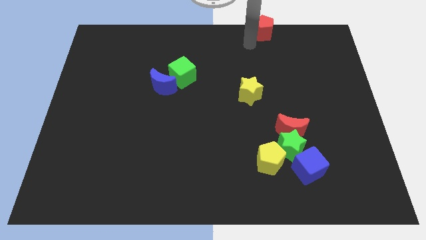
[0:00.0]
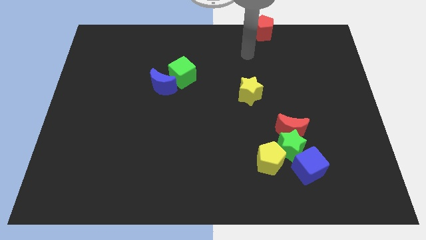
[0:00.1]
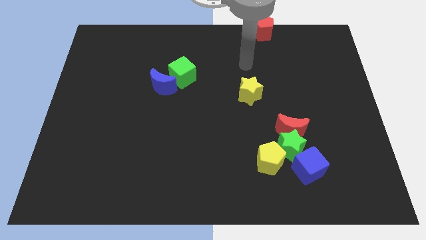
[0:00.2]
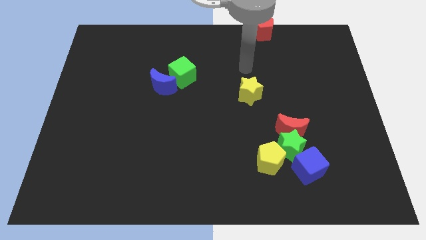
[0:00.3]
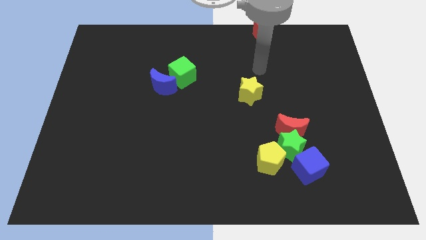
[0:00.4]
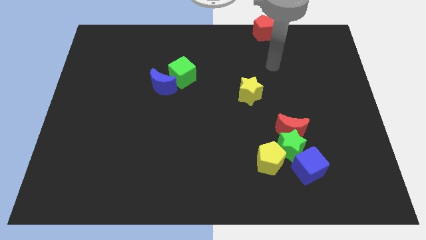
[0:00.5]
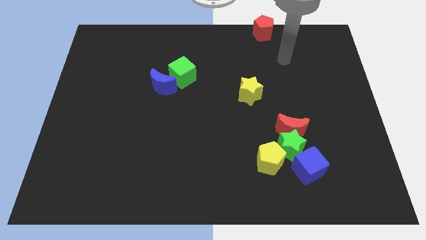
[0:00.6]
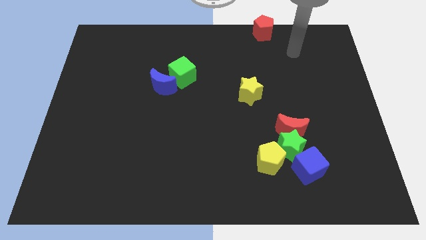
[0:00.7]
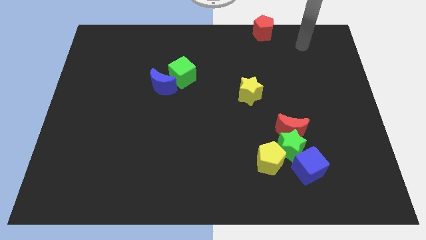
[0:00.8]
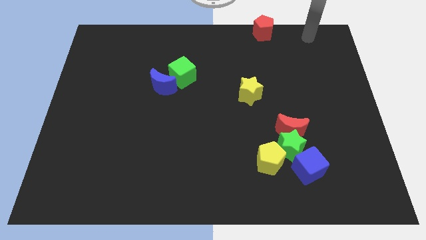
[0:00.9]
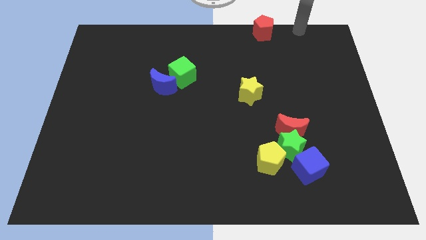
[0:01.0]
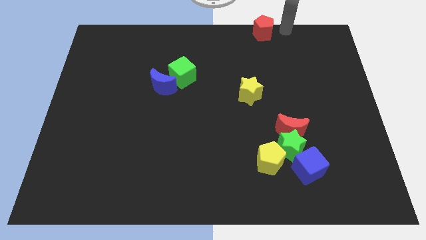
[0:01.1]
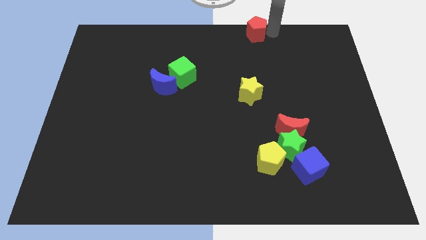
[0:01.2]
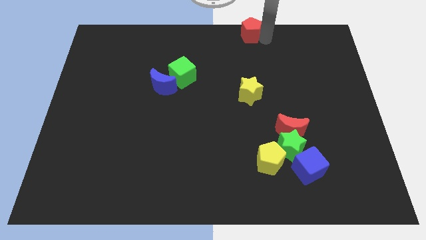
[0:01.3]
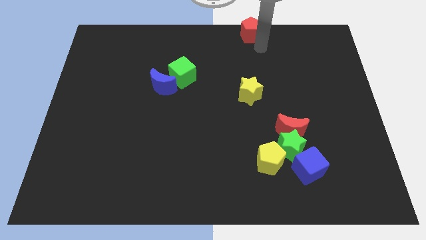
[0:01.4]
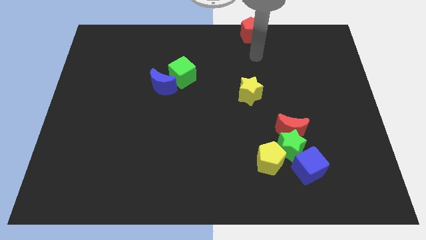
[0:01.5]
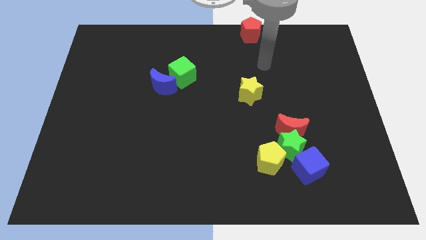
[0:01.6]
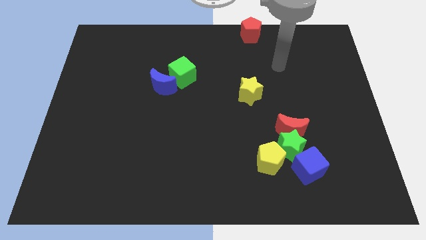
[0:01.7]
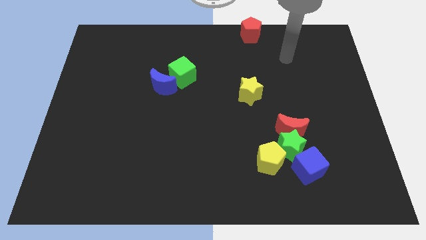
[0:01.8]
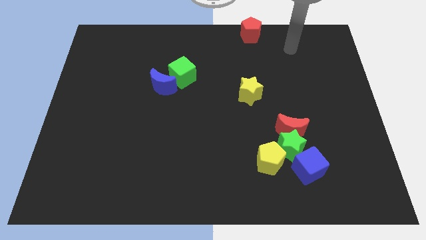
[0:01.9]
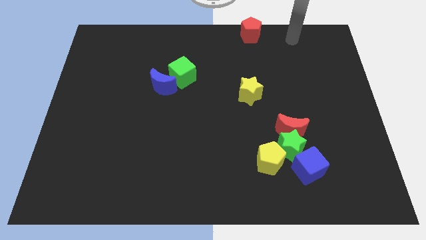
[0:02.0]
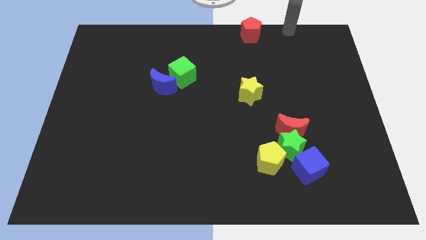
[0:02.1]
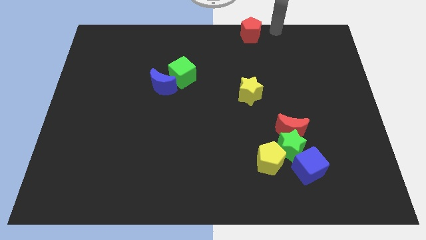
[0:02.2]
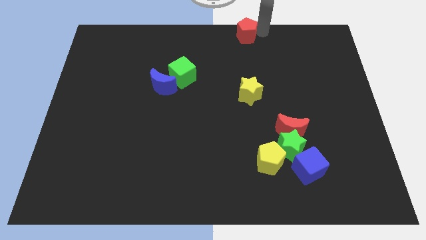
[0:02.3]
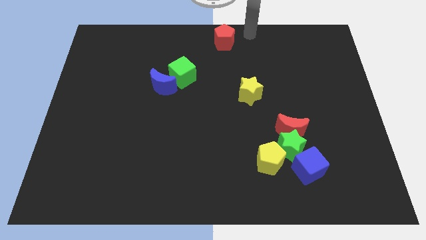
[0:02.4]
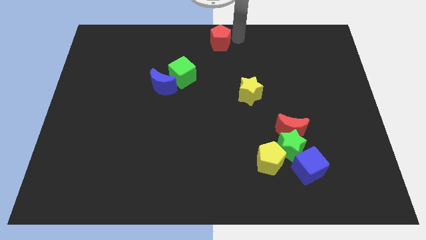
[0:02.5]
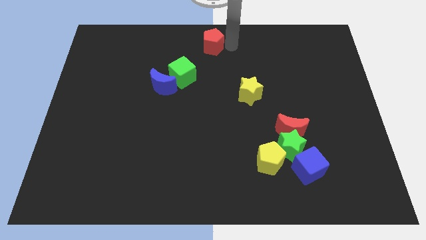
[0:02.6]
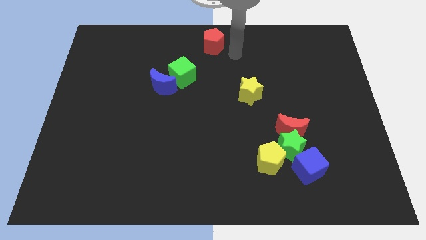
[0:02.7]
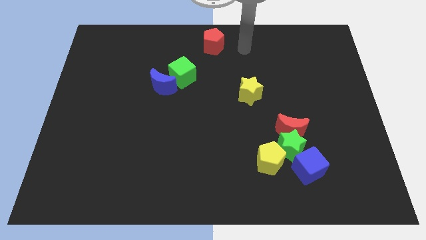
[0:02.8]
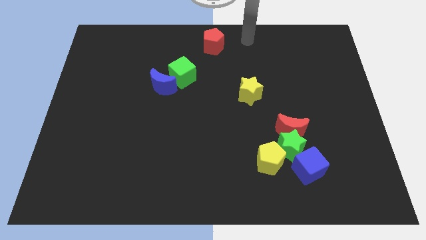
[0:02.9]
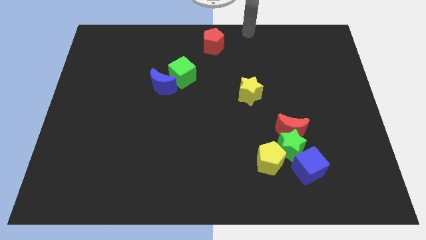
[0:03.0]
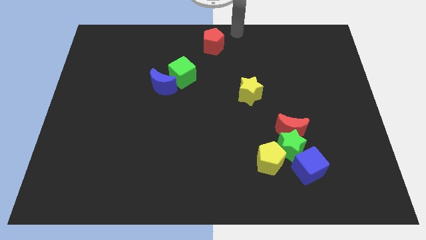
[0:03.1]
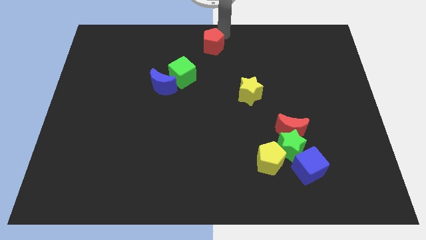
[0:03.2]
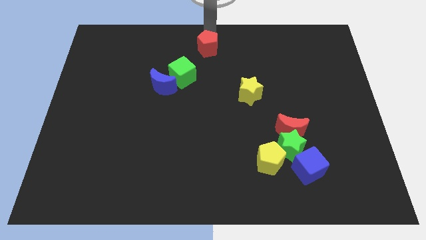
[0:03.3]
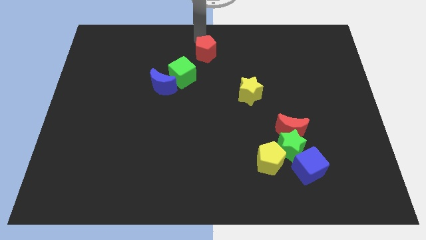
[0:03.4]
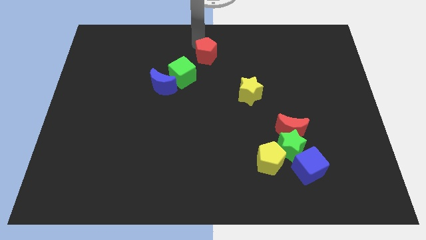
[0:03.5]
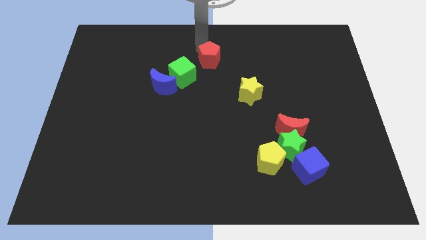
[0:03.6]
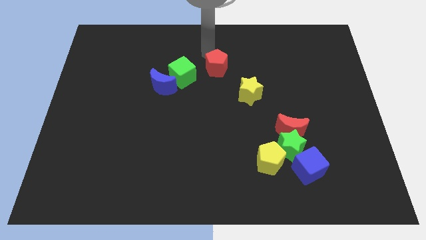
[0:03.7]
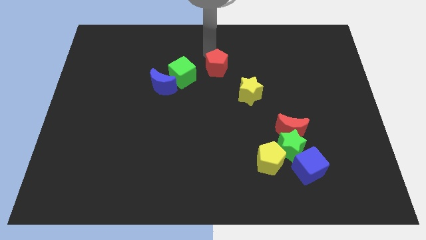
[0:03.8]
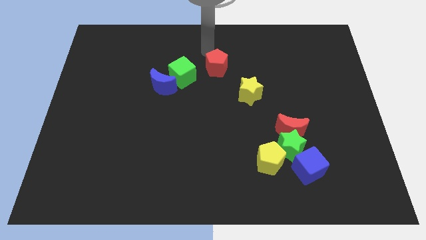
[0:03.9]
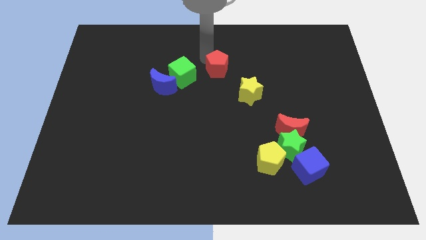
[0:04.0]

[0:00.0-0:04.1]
push red pentagon to the right of green cube

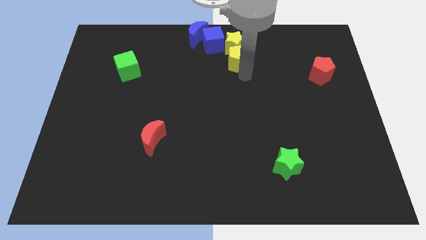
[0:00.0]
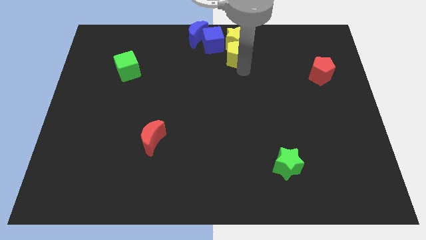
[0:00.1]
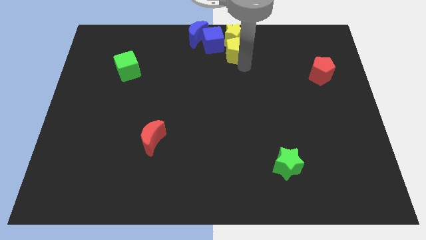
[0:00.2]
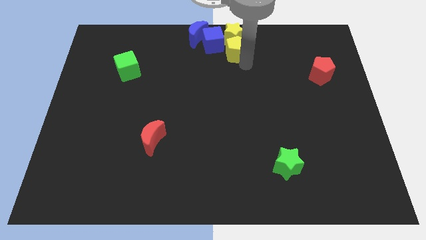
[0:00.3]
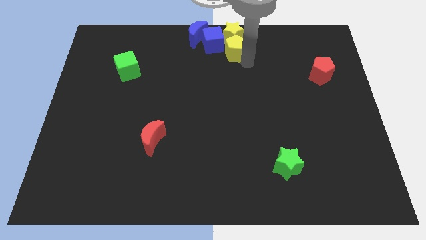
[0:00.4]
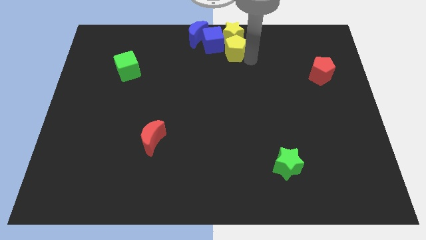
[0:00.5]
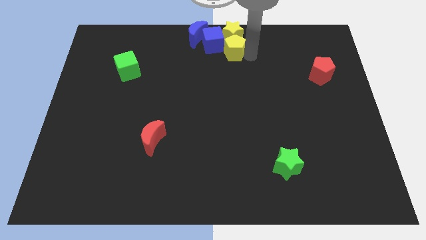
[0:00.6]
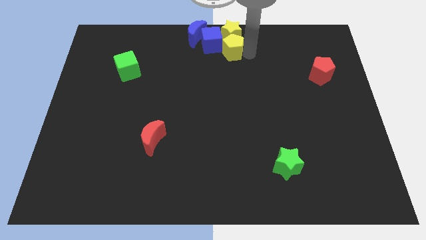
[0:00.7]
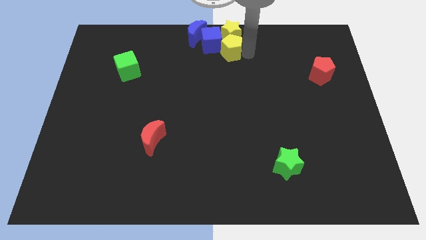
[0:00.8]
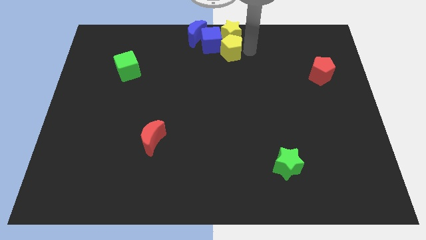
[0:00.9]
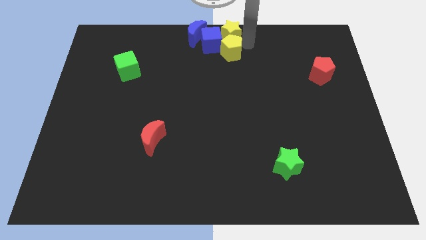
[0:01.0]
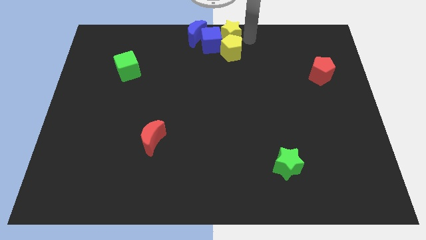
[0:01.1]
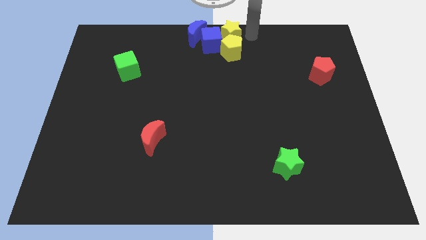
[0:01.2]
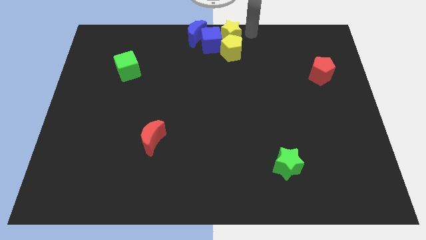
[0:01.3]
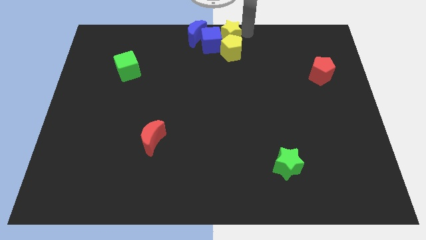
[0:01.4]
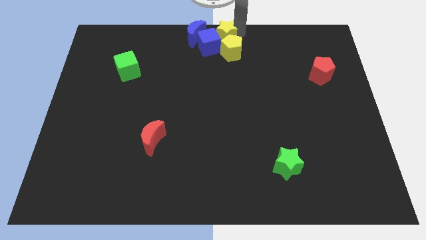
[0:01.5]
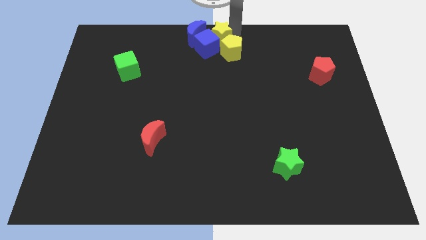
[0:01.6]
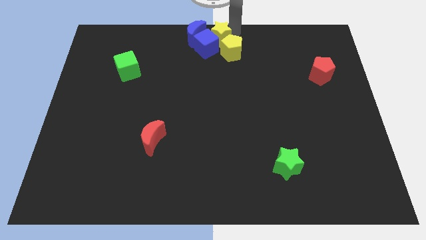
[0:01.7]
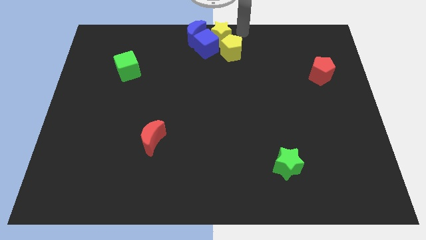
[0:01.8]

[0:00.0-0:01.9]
place yellow pentagon and yellow star into the blue blocks

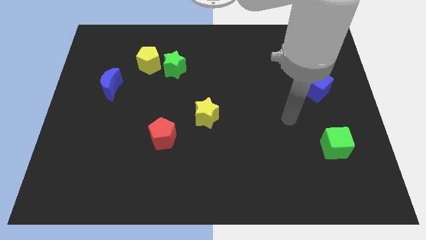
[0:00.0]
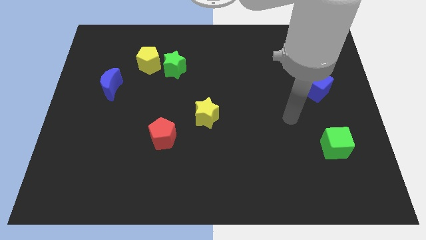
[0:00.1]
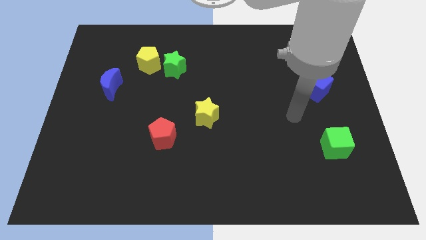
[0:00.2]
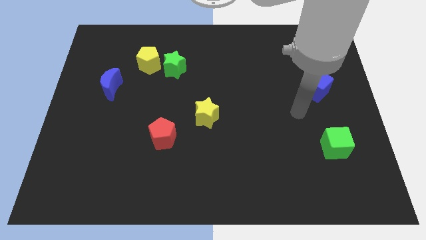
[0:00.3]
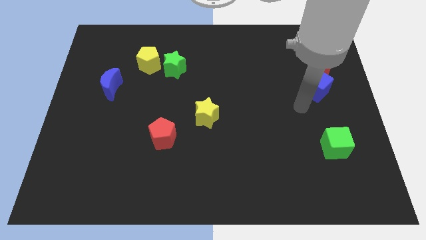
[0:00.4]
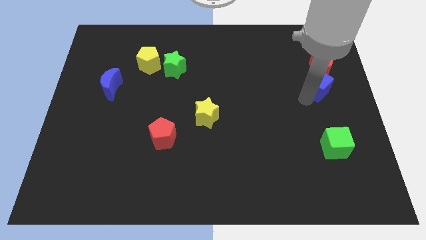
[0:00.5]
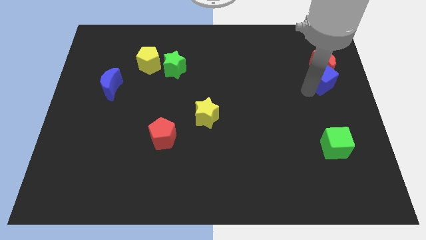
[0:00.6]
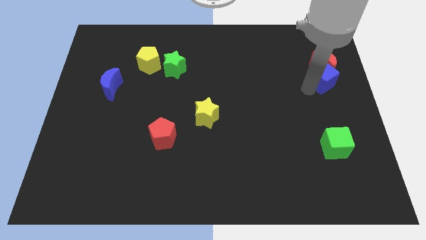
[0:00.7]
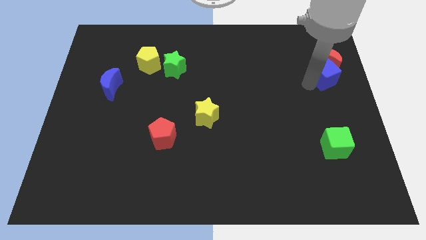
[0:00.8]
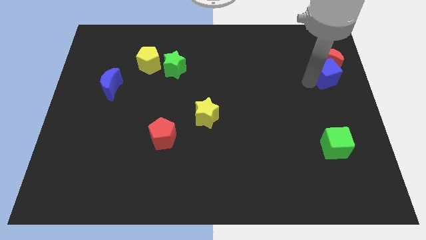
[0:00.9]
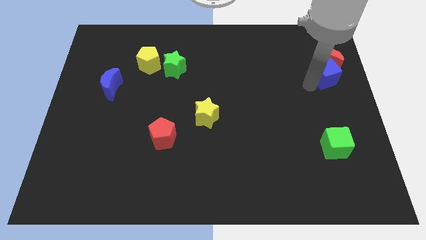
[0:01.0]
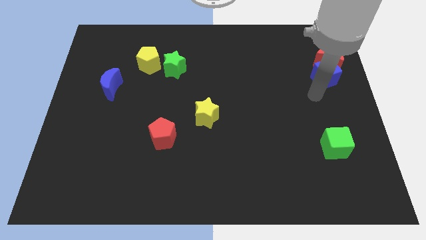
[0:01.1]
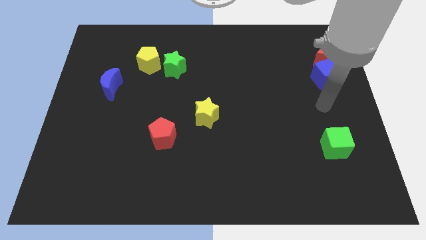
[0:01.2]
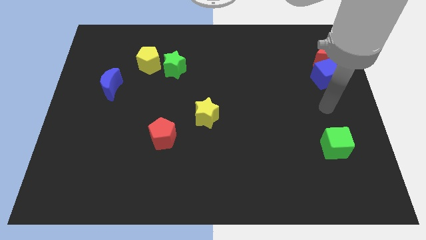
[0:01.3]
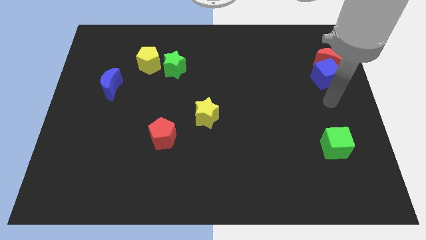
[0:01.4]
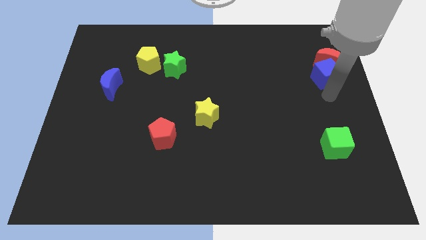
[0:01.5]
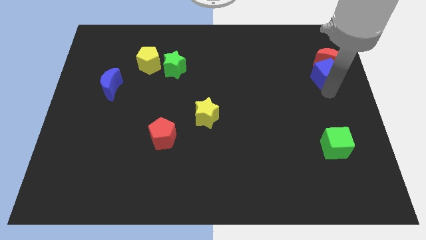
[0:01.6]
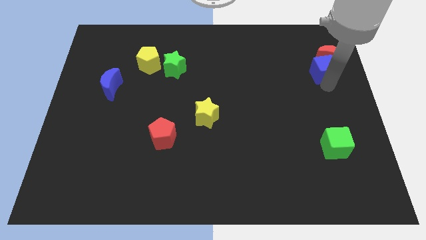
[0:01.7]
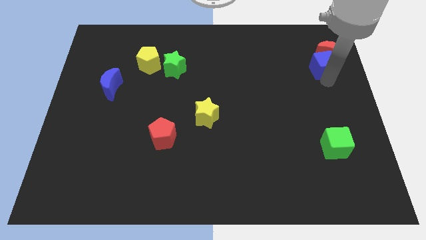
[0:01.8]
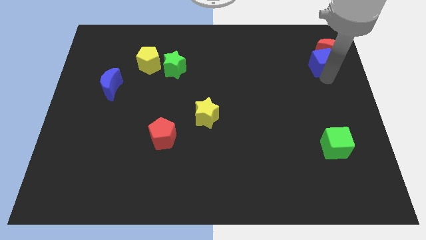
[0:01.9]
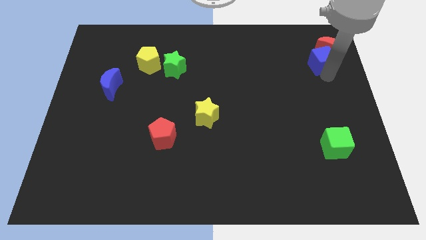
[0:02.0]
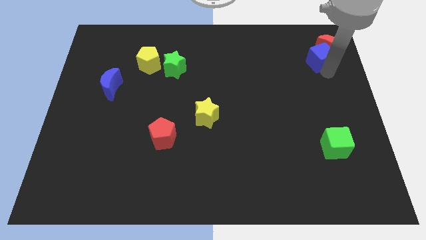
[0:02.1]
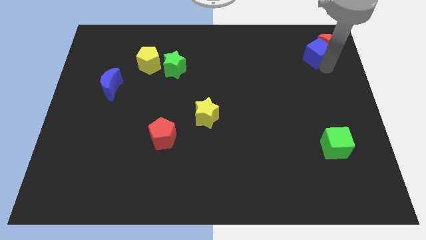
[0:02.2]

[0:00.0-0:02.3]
push blue cube into red moon

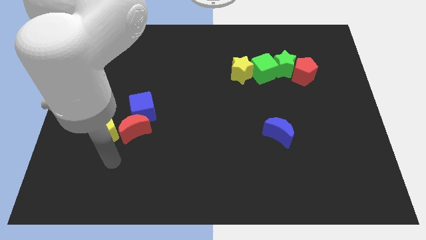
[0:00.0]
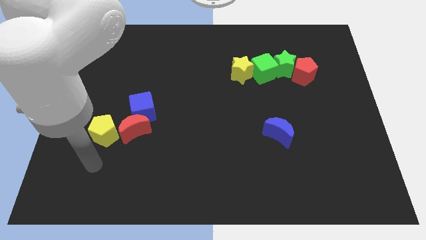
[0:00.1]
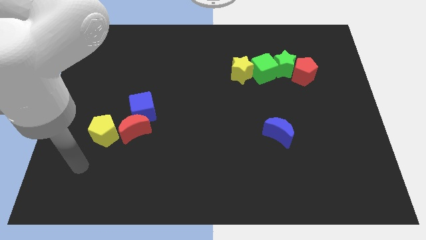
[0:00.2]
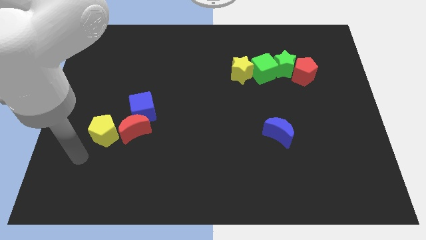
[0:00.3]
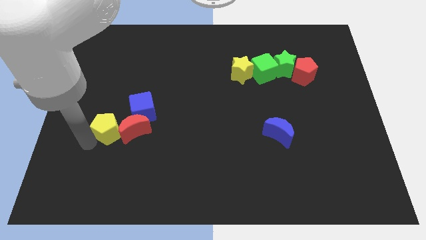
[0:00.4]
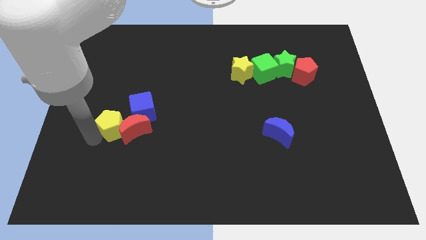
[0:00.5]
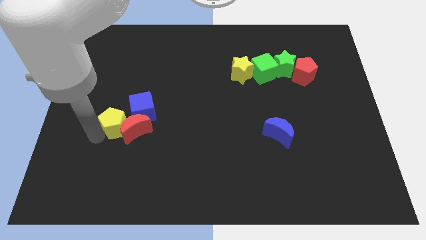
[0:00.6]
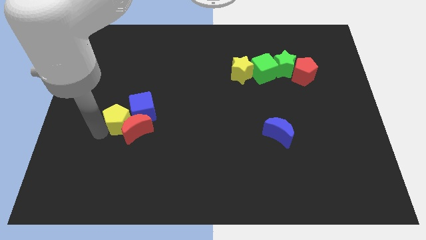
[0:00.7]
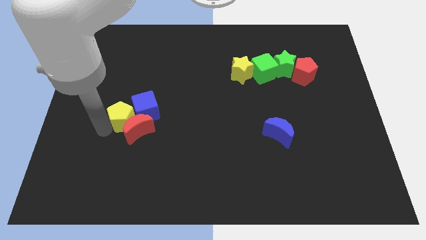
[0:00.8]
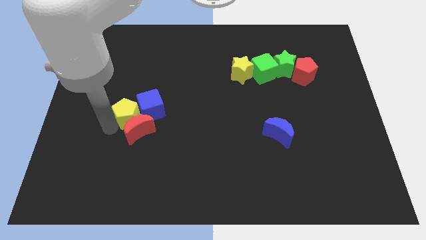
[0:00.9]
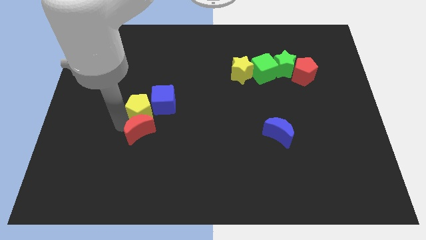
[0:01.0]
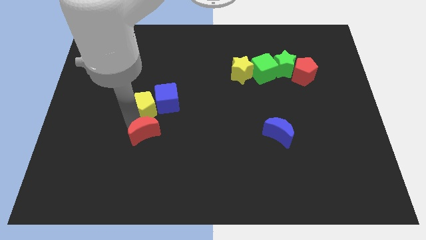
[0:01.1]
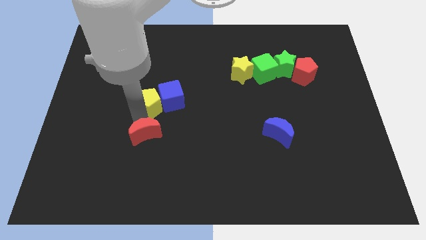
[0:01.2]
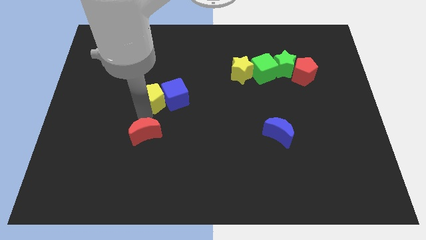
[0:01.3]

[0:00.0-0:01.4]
move yellow pentagon ito blue cube
